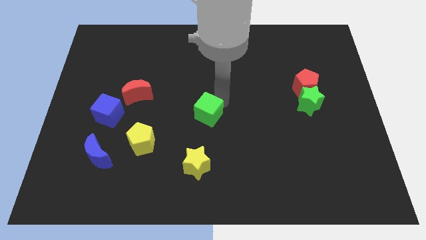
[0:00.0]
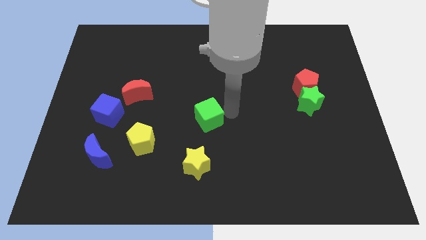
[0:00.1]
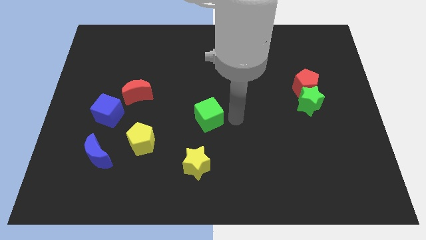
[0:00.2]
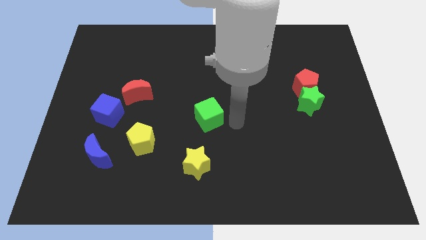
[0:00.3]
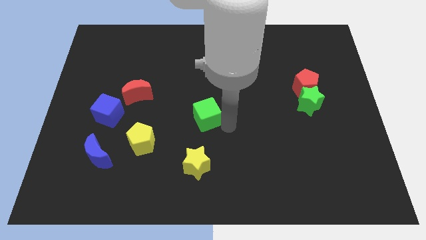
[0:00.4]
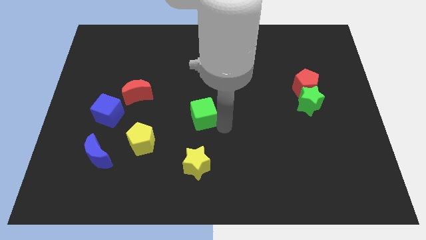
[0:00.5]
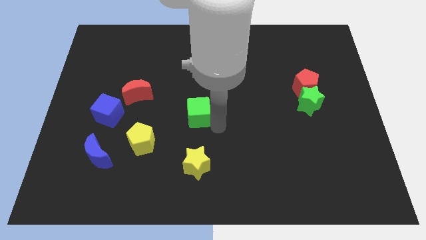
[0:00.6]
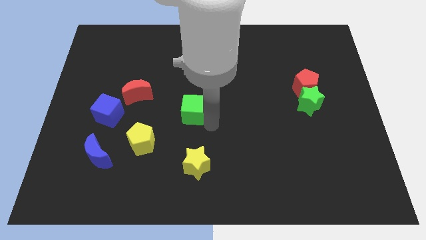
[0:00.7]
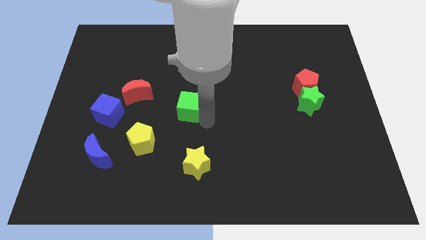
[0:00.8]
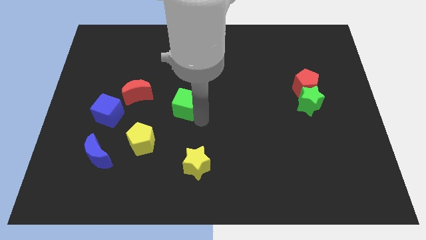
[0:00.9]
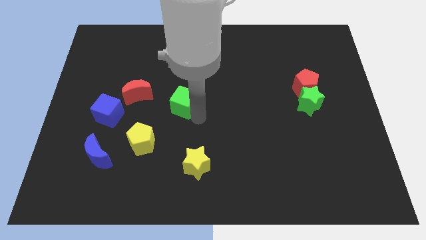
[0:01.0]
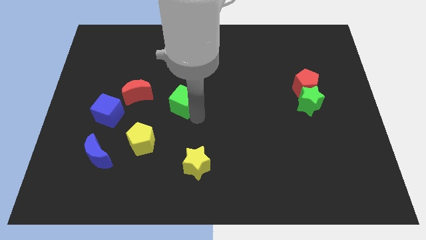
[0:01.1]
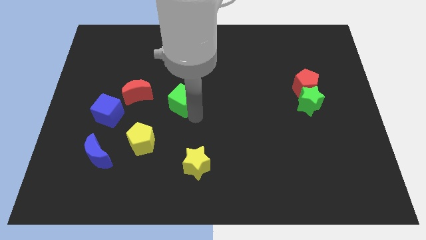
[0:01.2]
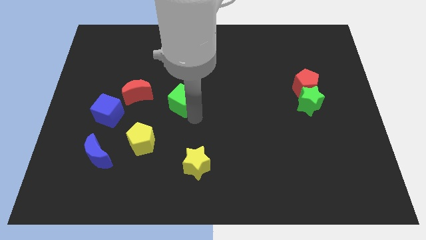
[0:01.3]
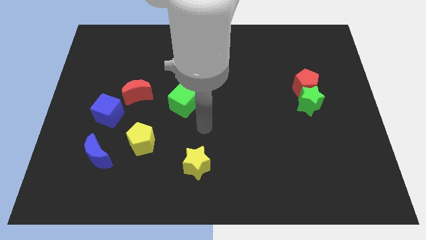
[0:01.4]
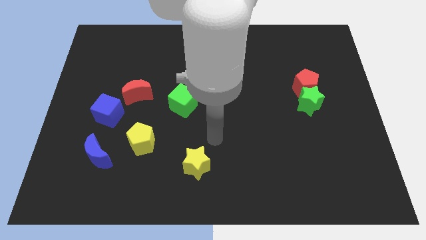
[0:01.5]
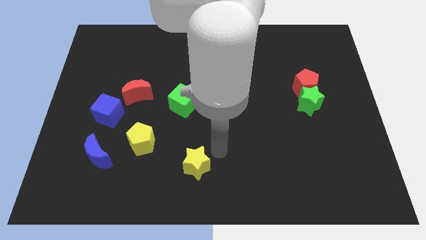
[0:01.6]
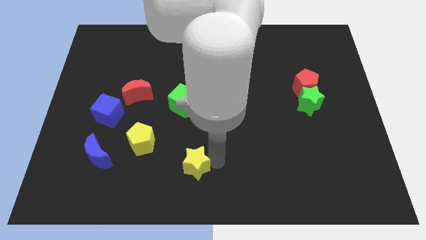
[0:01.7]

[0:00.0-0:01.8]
move green cube near red moon

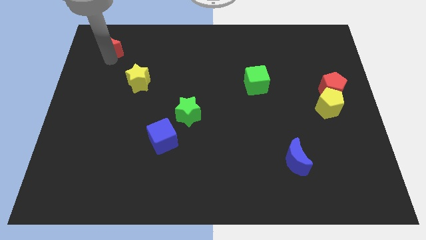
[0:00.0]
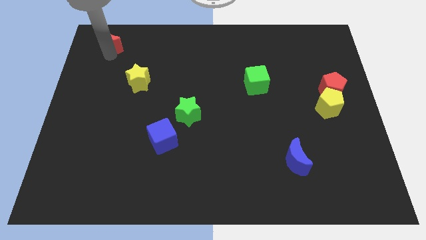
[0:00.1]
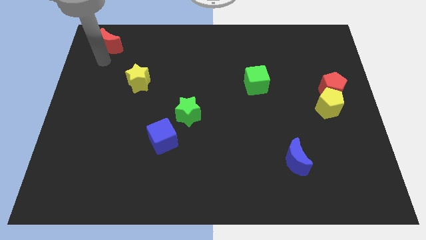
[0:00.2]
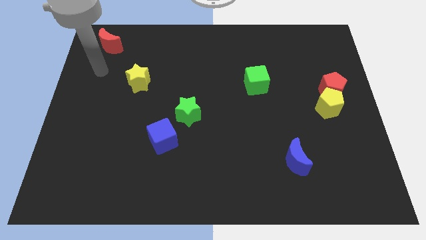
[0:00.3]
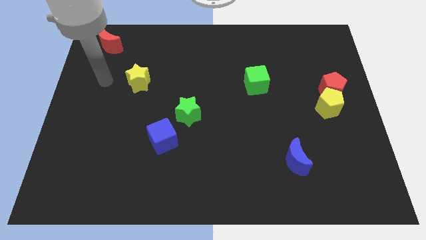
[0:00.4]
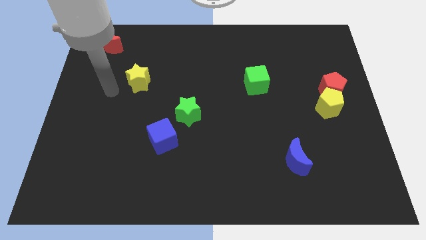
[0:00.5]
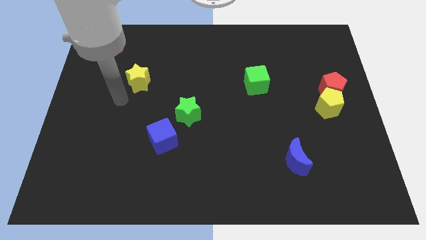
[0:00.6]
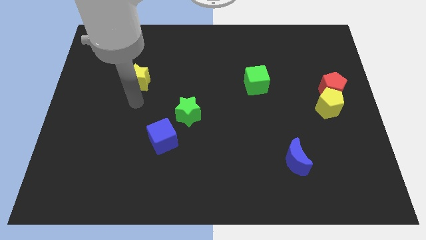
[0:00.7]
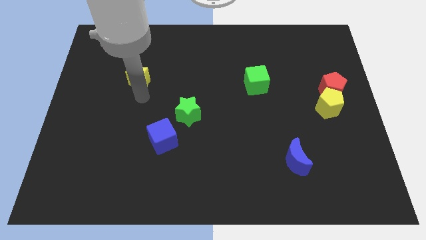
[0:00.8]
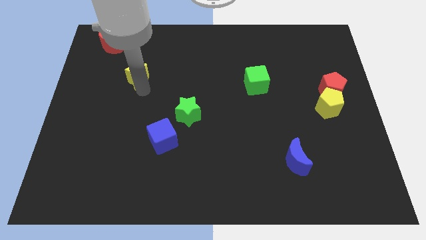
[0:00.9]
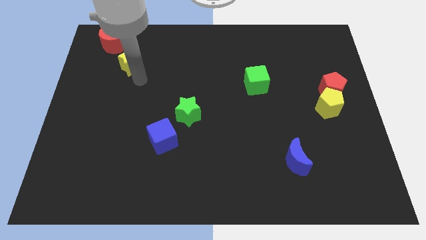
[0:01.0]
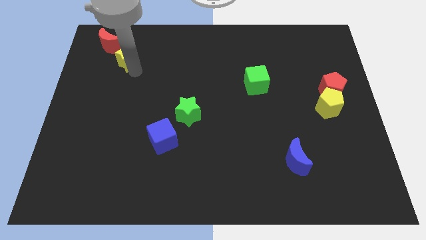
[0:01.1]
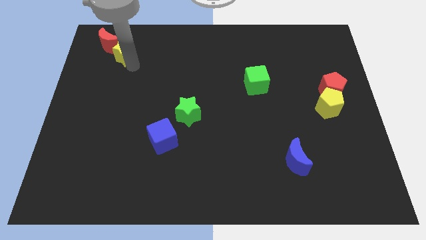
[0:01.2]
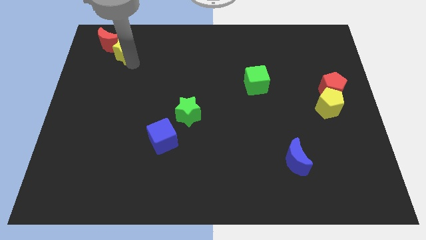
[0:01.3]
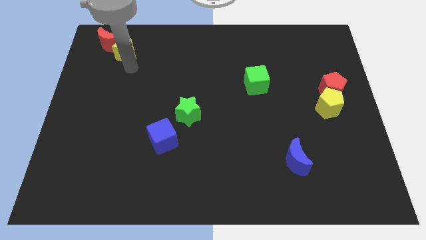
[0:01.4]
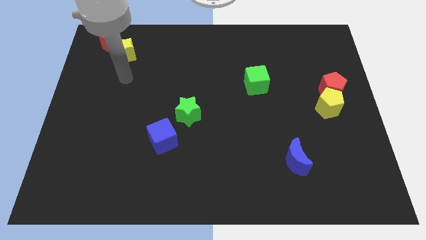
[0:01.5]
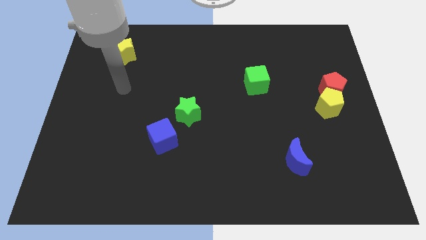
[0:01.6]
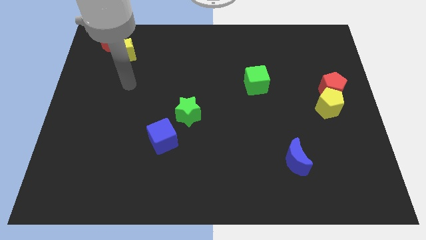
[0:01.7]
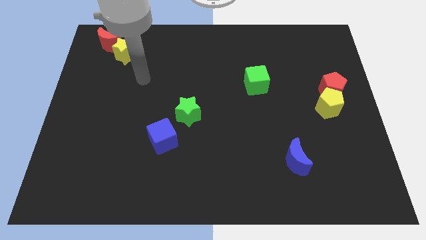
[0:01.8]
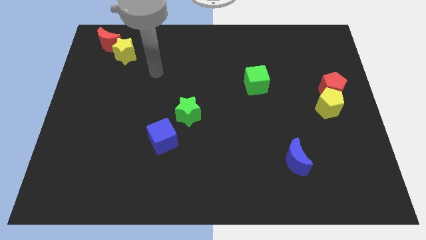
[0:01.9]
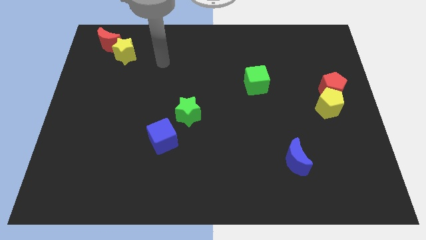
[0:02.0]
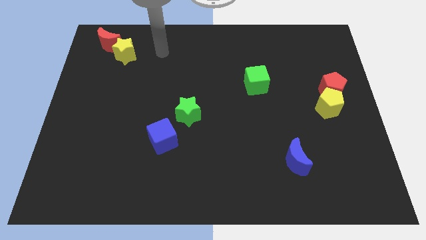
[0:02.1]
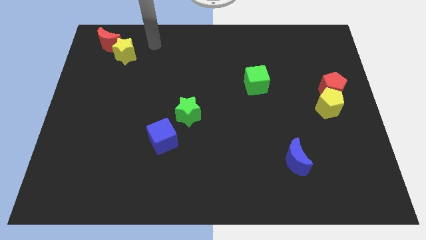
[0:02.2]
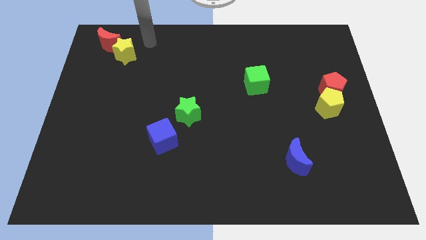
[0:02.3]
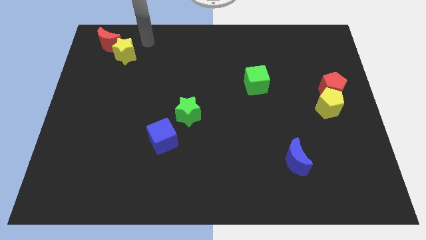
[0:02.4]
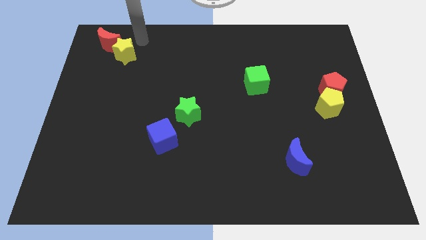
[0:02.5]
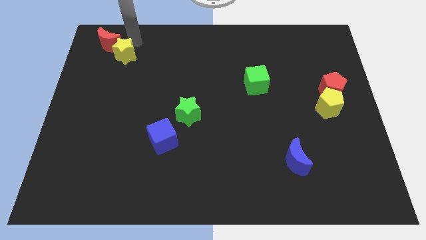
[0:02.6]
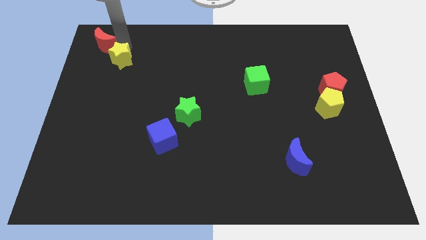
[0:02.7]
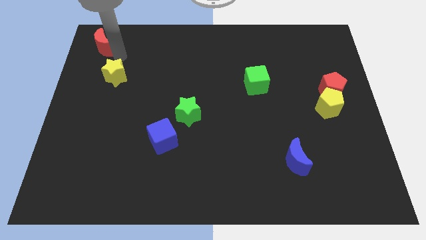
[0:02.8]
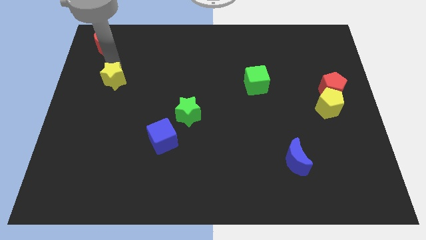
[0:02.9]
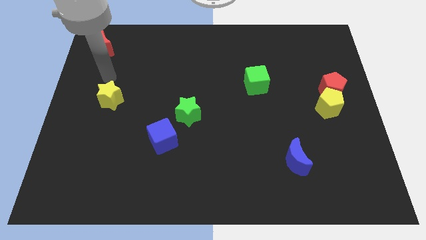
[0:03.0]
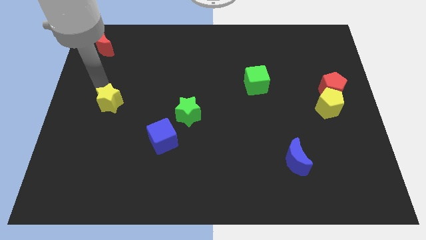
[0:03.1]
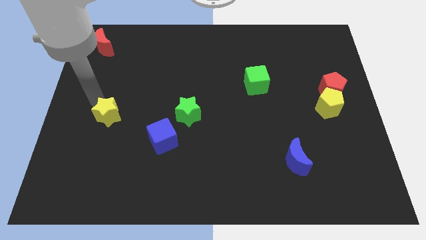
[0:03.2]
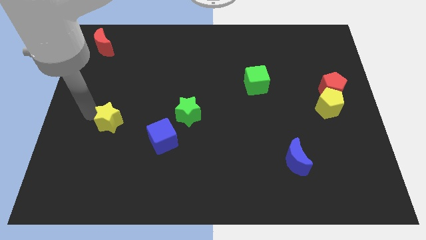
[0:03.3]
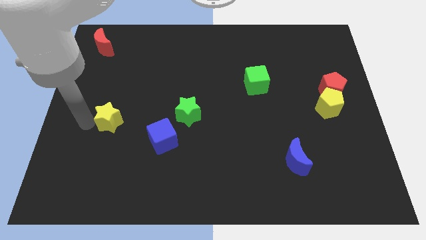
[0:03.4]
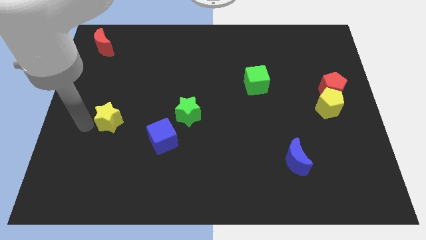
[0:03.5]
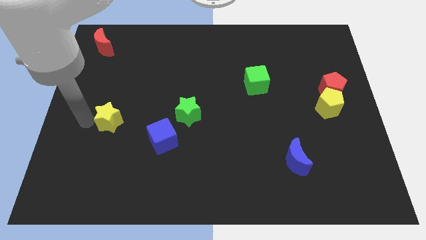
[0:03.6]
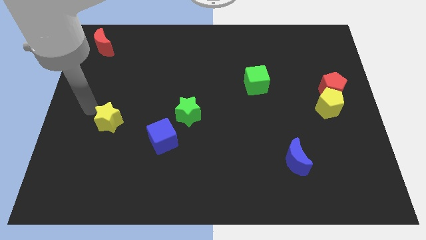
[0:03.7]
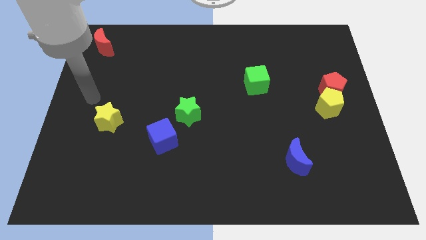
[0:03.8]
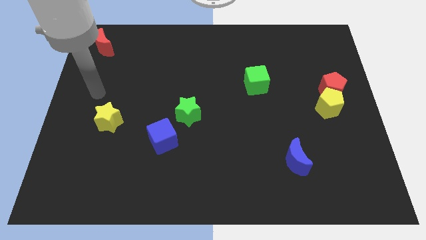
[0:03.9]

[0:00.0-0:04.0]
push the yellow star to the left of the green star

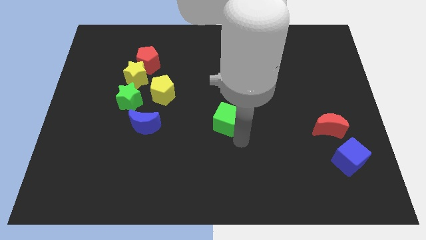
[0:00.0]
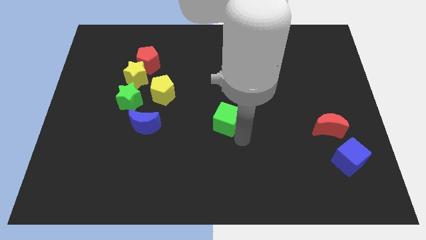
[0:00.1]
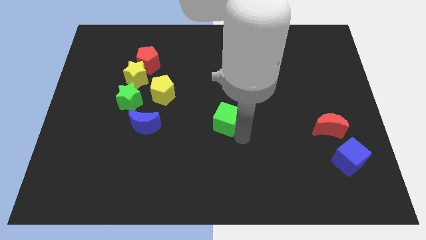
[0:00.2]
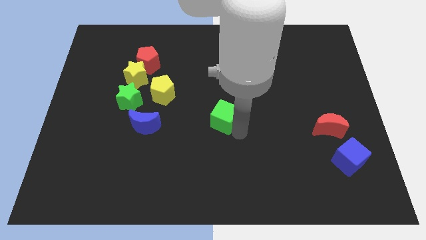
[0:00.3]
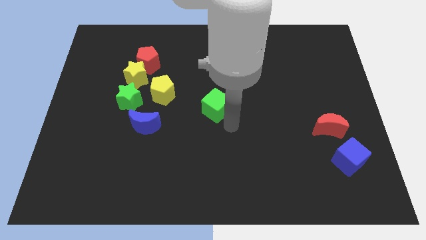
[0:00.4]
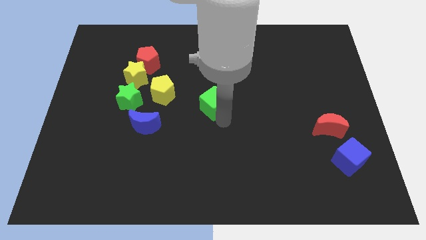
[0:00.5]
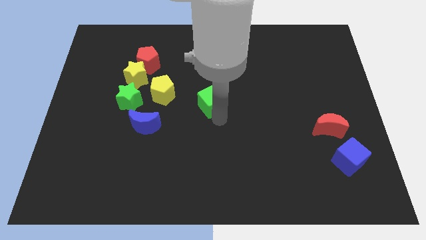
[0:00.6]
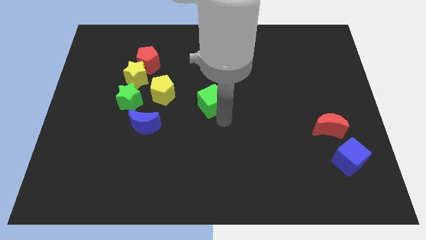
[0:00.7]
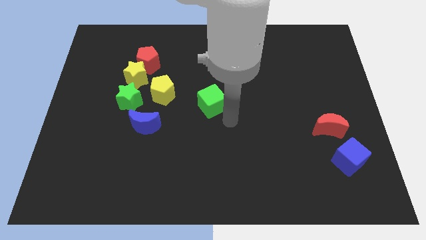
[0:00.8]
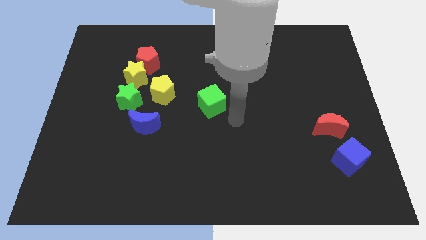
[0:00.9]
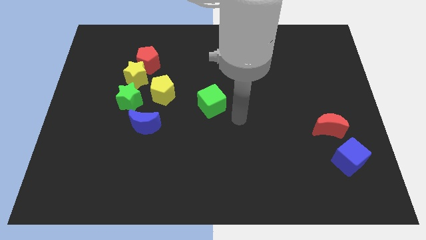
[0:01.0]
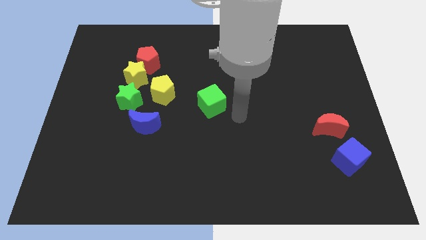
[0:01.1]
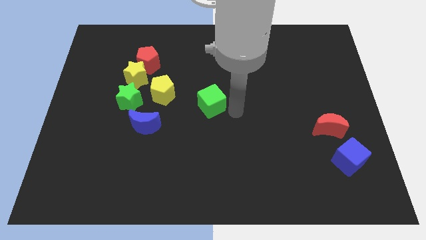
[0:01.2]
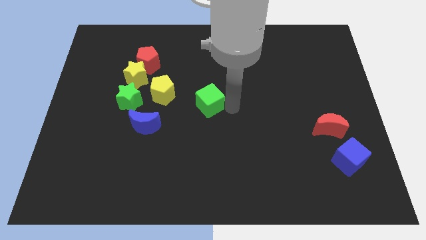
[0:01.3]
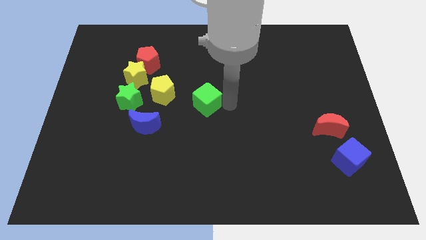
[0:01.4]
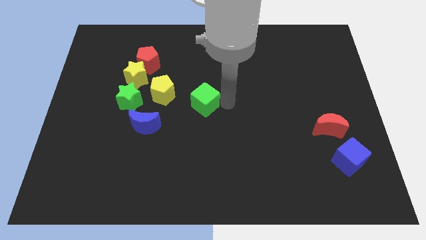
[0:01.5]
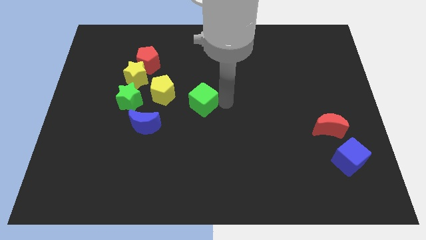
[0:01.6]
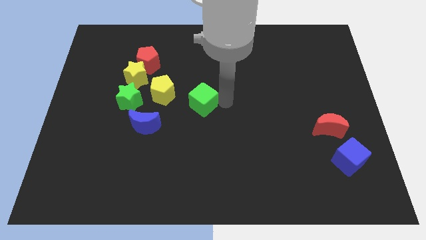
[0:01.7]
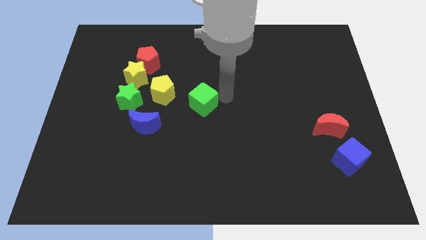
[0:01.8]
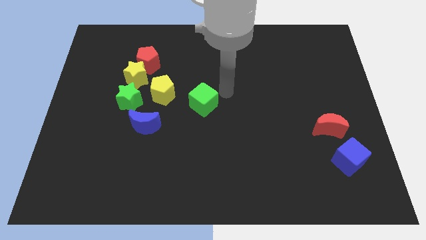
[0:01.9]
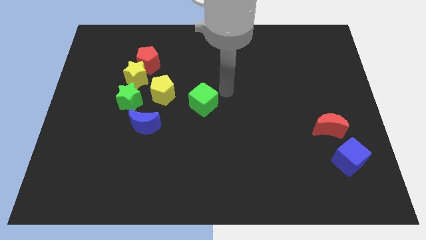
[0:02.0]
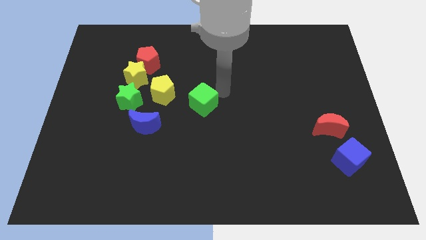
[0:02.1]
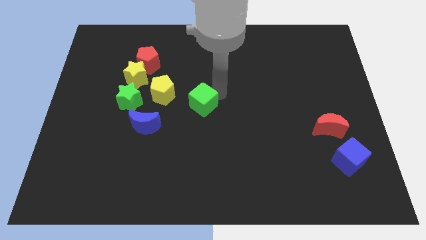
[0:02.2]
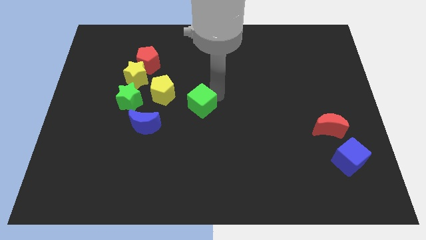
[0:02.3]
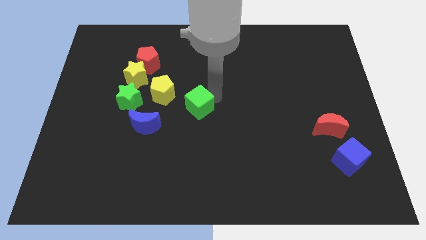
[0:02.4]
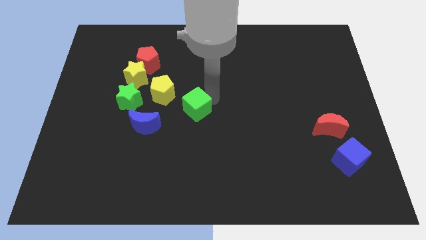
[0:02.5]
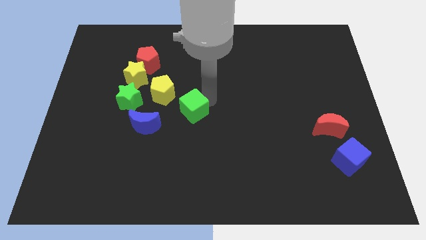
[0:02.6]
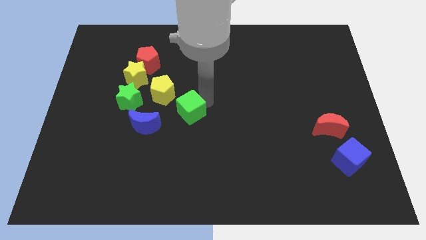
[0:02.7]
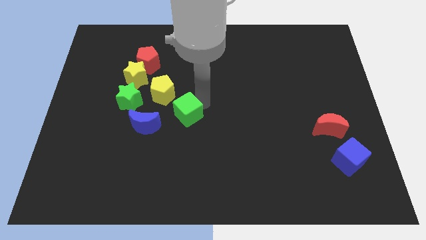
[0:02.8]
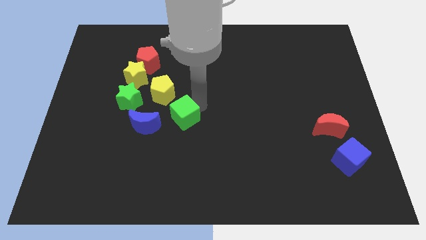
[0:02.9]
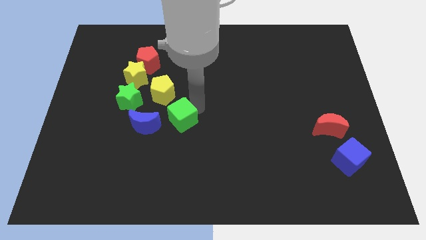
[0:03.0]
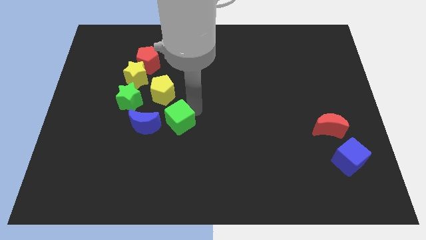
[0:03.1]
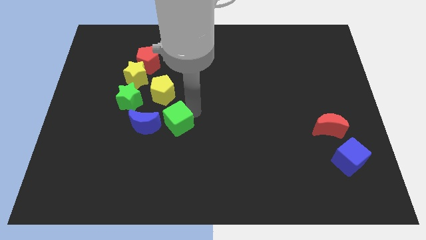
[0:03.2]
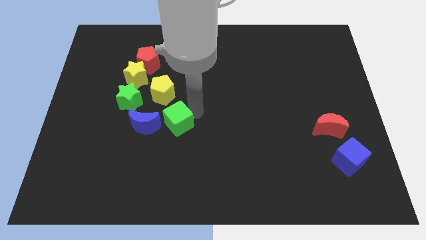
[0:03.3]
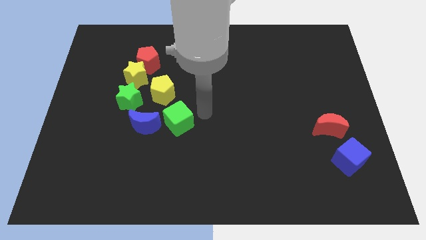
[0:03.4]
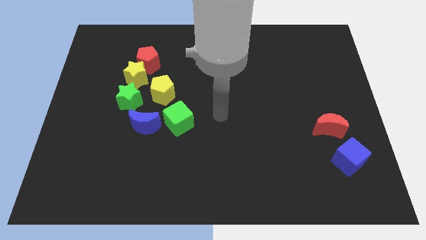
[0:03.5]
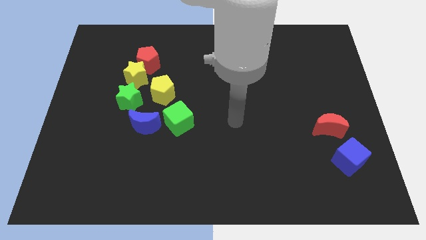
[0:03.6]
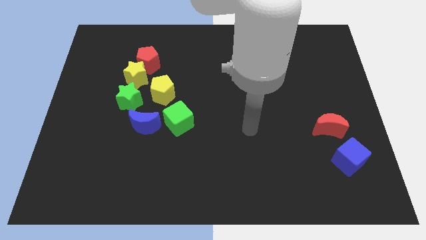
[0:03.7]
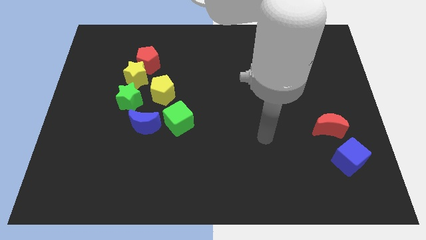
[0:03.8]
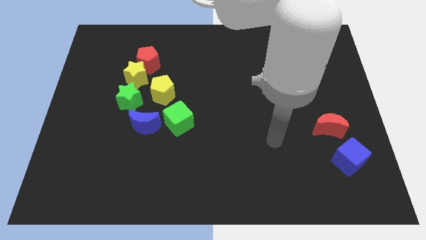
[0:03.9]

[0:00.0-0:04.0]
place the green cube right to the blue crsescent
